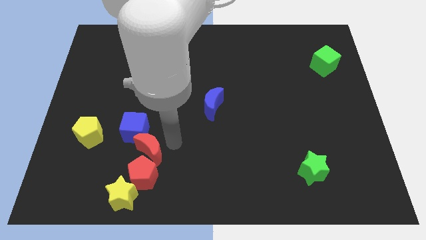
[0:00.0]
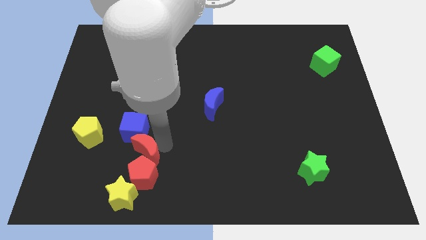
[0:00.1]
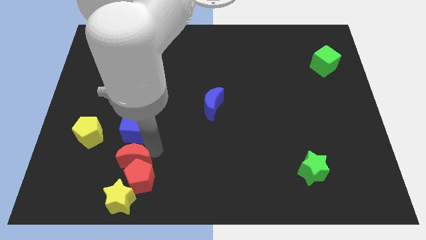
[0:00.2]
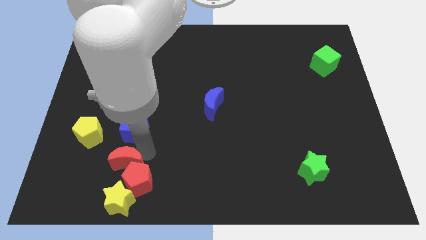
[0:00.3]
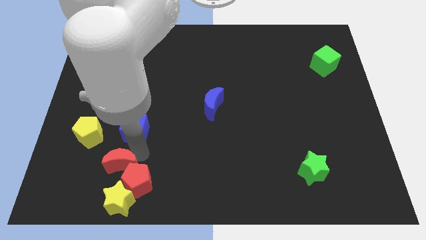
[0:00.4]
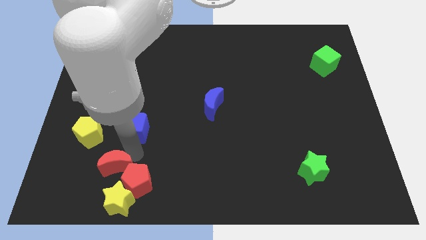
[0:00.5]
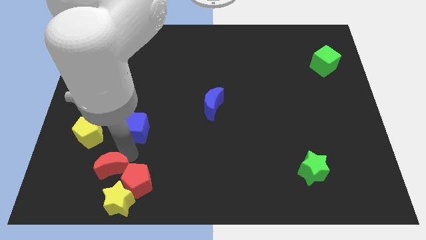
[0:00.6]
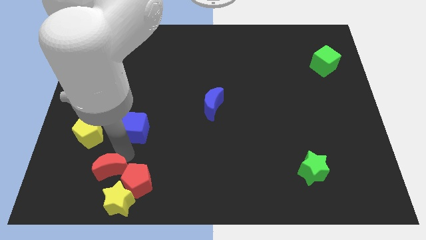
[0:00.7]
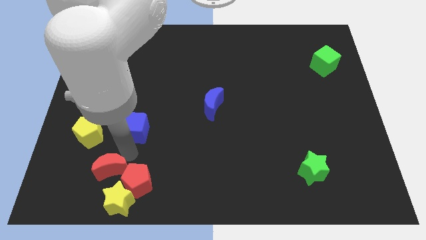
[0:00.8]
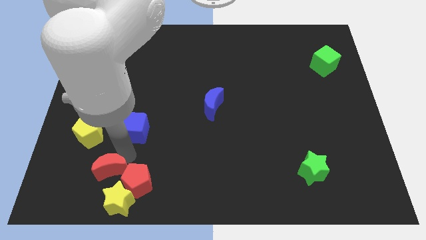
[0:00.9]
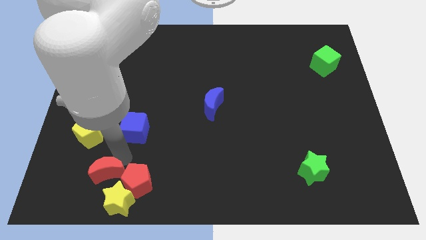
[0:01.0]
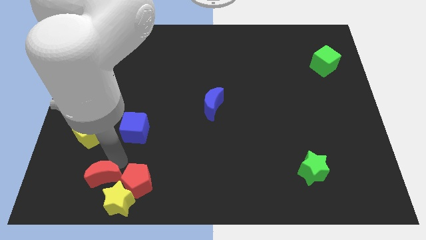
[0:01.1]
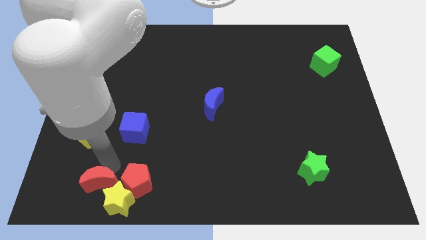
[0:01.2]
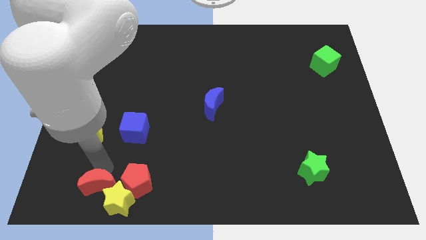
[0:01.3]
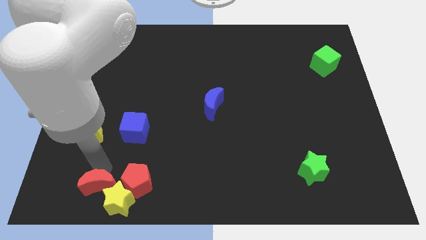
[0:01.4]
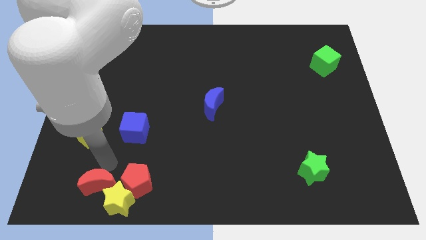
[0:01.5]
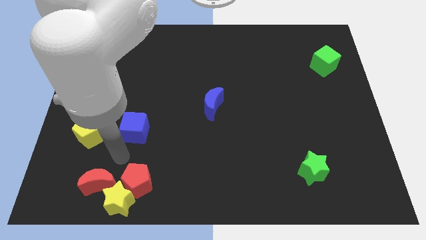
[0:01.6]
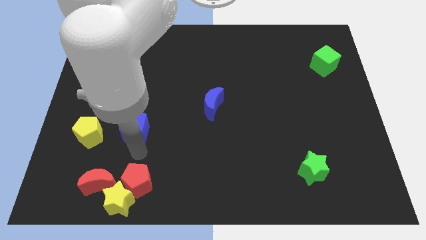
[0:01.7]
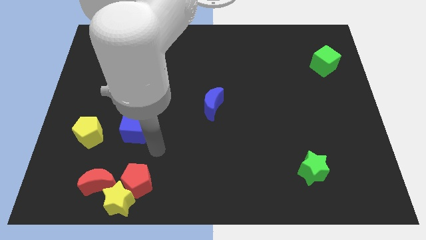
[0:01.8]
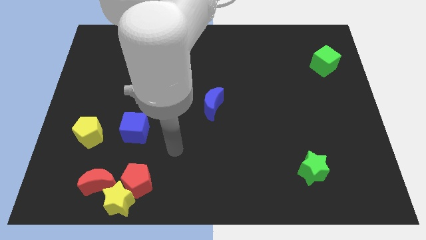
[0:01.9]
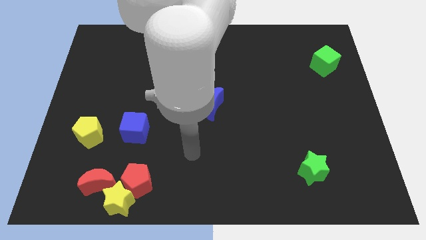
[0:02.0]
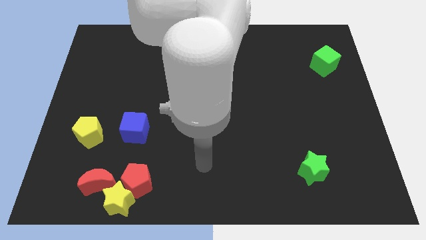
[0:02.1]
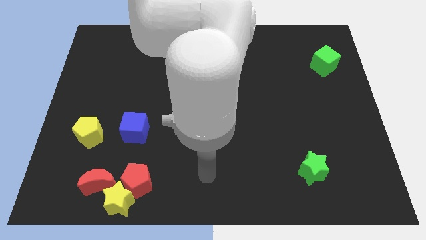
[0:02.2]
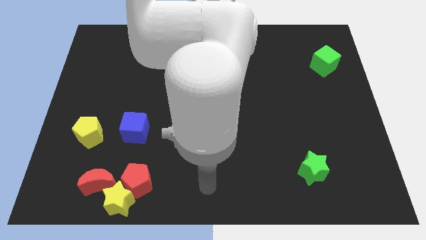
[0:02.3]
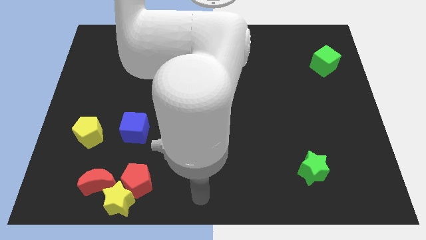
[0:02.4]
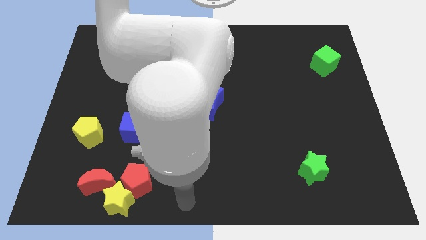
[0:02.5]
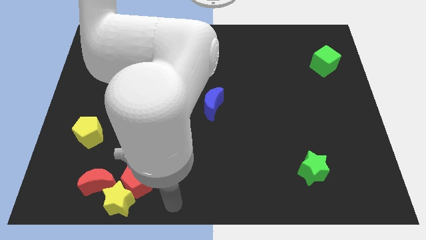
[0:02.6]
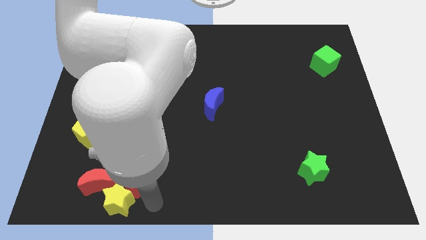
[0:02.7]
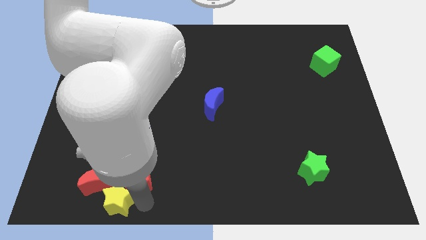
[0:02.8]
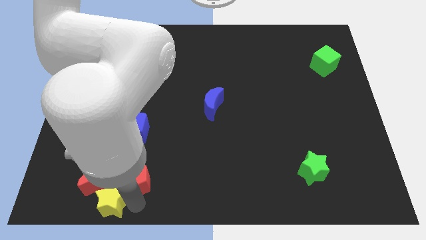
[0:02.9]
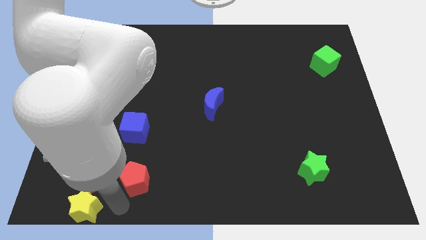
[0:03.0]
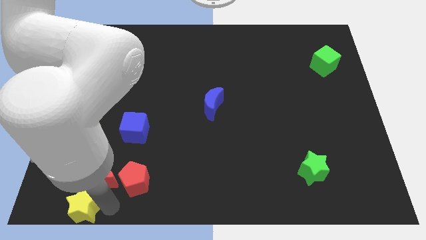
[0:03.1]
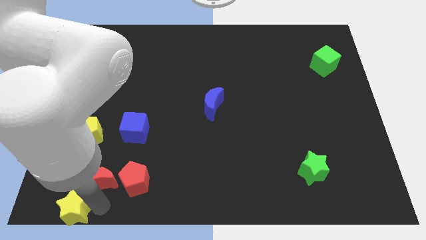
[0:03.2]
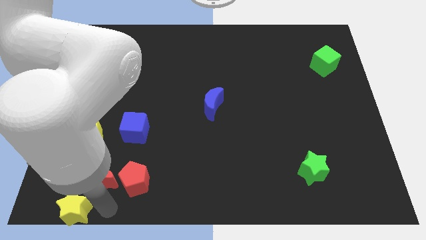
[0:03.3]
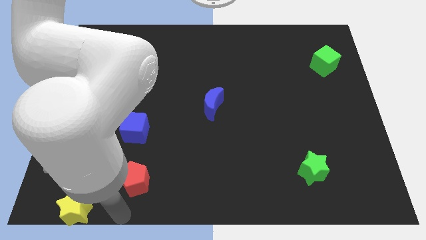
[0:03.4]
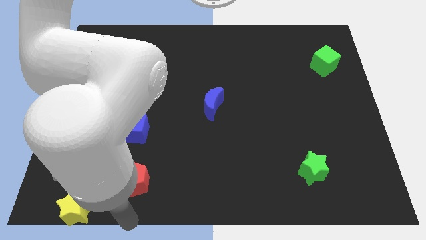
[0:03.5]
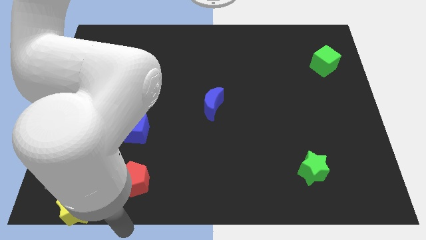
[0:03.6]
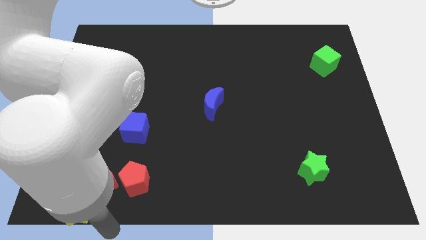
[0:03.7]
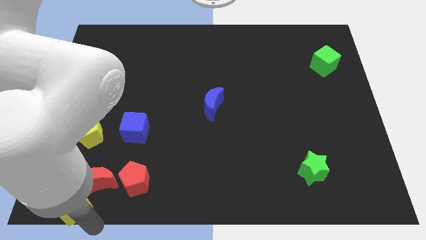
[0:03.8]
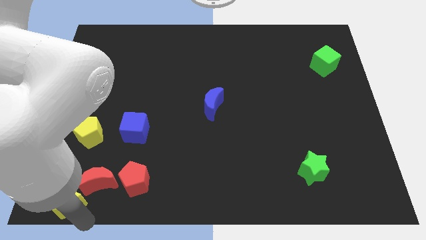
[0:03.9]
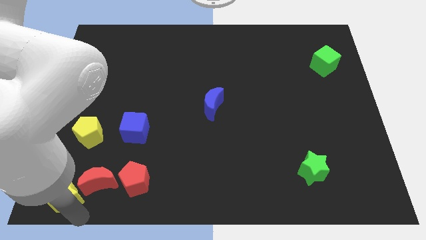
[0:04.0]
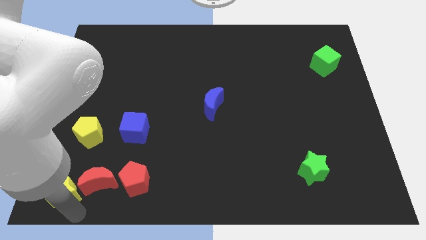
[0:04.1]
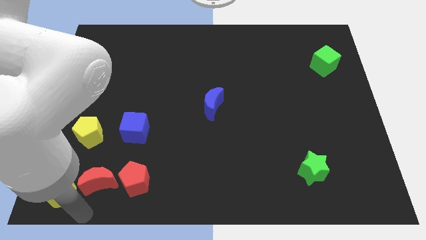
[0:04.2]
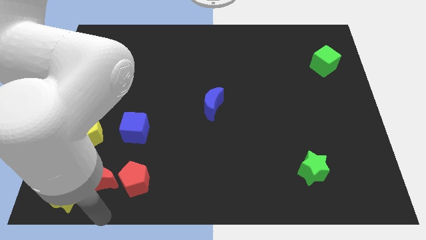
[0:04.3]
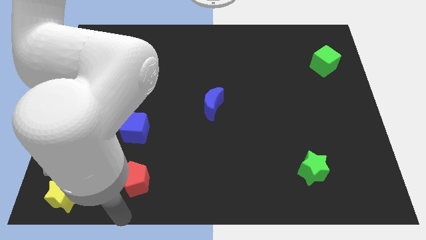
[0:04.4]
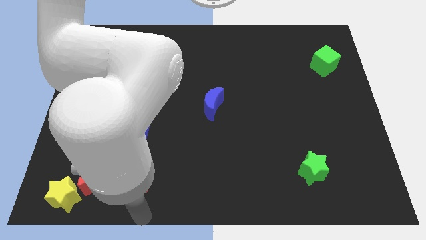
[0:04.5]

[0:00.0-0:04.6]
move yellow star to the bottom left

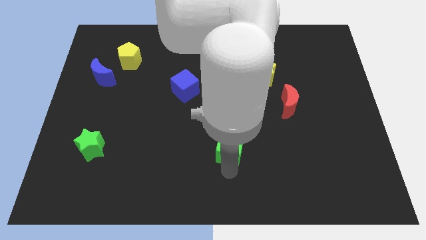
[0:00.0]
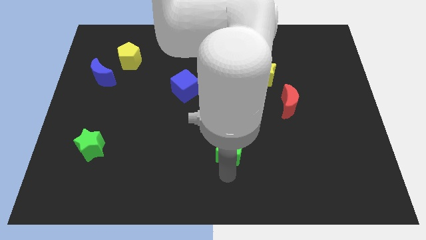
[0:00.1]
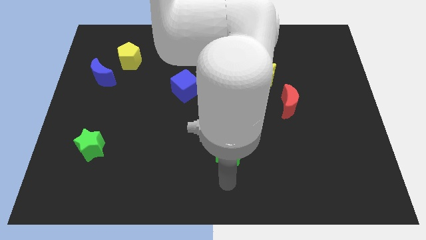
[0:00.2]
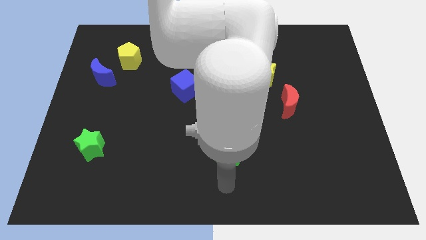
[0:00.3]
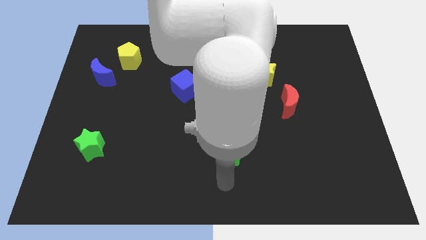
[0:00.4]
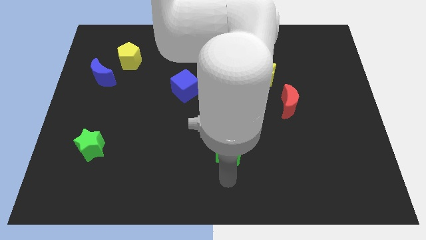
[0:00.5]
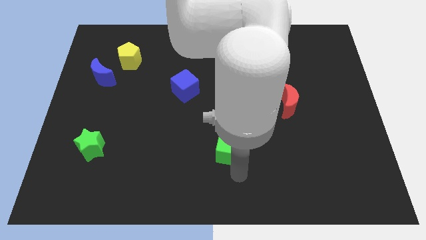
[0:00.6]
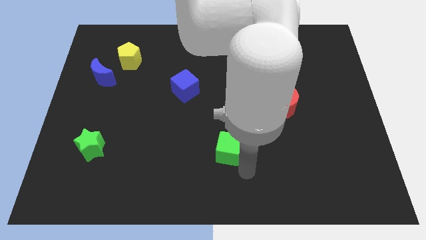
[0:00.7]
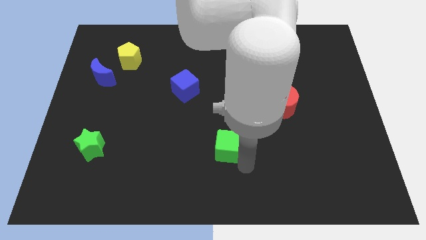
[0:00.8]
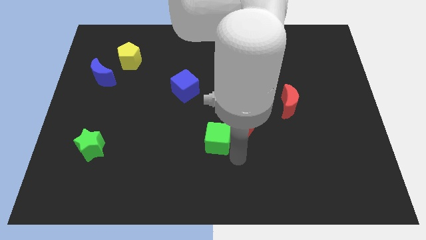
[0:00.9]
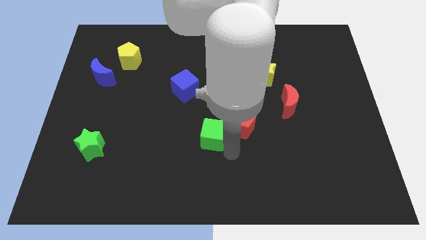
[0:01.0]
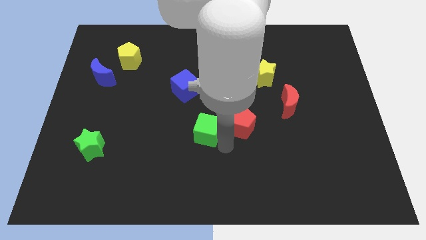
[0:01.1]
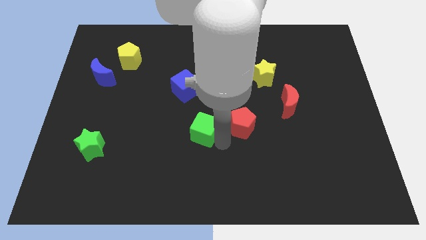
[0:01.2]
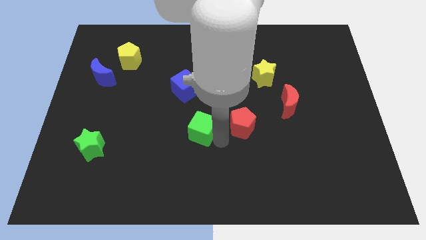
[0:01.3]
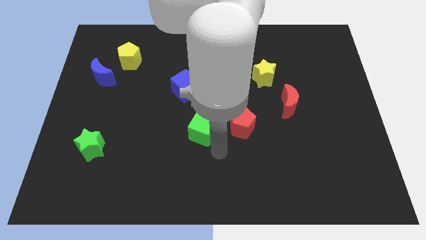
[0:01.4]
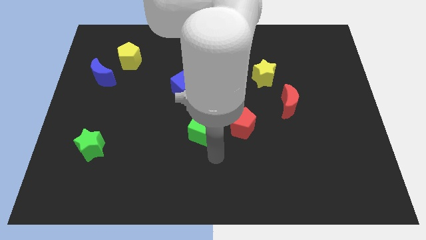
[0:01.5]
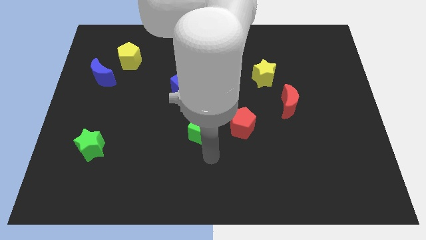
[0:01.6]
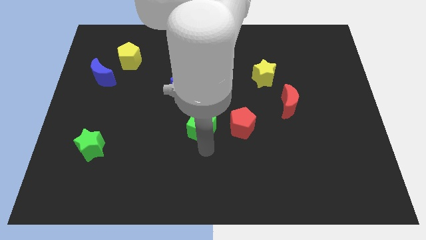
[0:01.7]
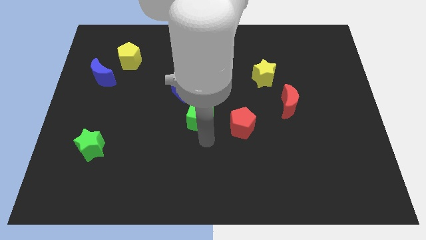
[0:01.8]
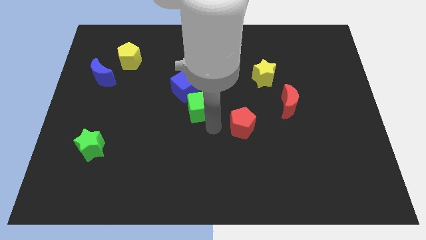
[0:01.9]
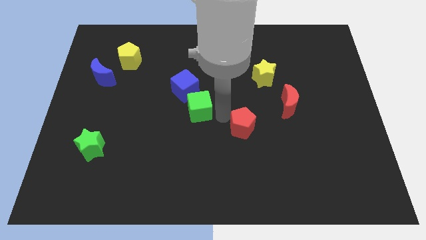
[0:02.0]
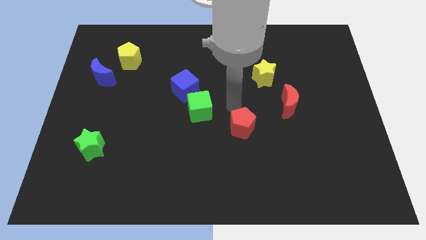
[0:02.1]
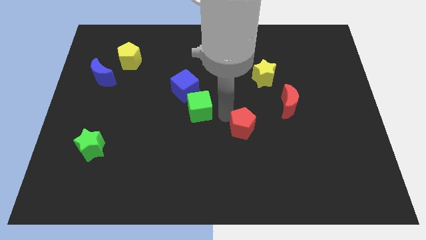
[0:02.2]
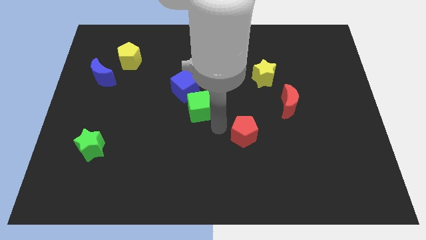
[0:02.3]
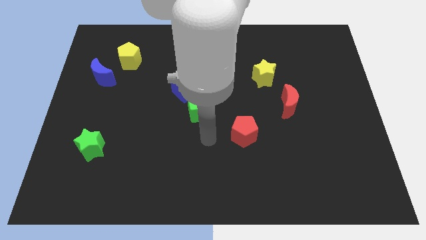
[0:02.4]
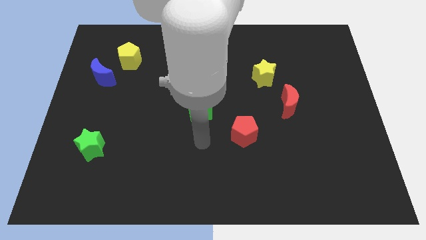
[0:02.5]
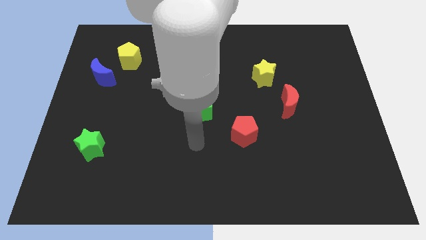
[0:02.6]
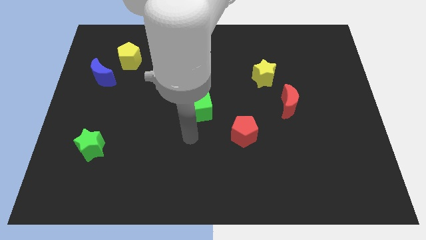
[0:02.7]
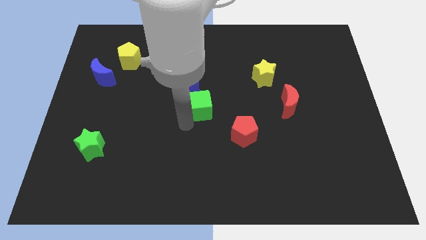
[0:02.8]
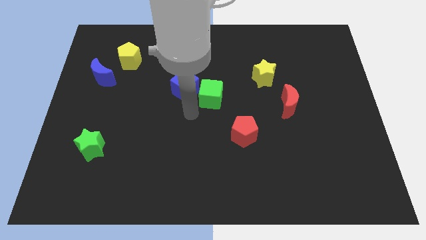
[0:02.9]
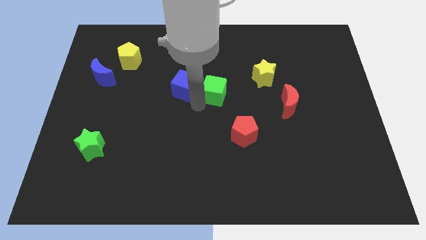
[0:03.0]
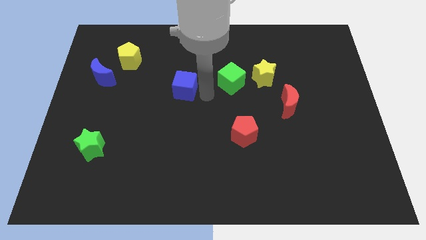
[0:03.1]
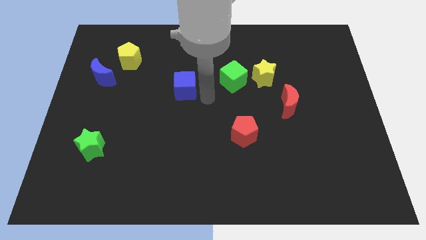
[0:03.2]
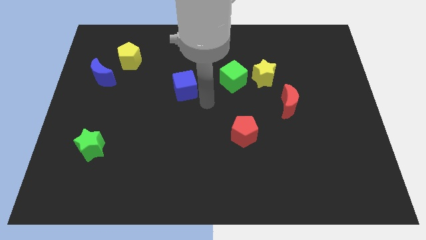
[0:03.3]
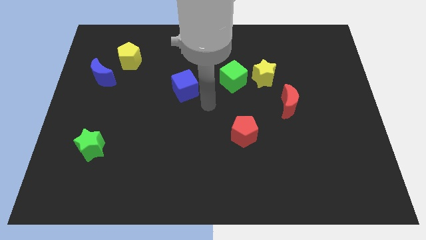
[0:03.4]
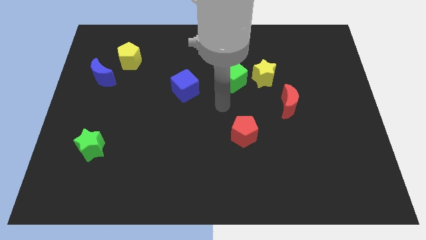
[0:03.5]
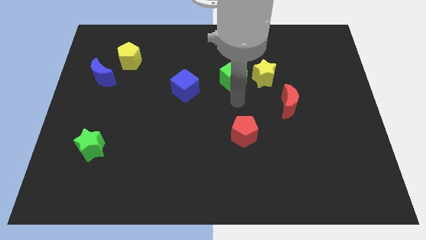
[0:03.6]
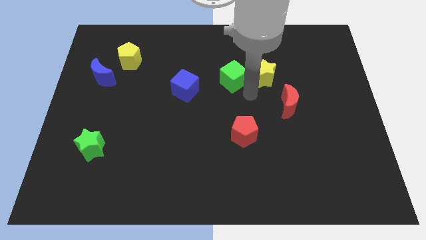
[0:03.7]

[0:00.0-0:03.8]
place the green cube in between the yellow star and blue cube

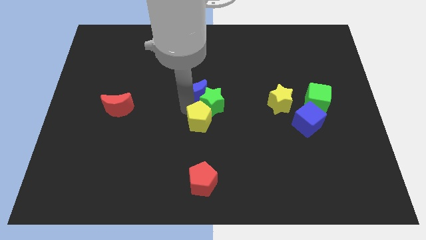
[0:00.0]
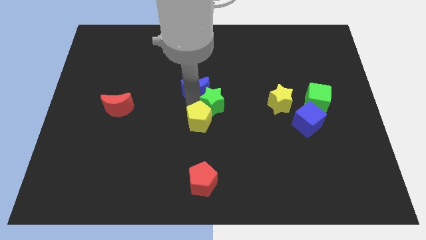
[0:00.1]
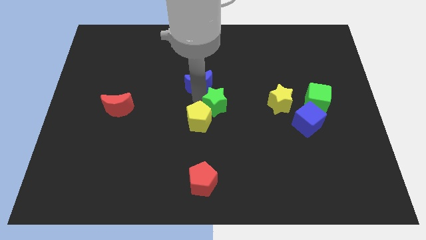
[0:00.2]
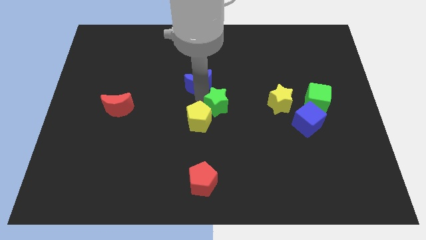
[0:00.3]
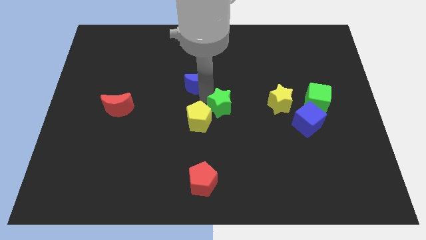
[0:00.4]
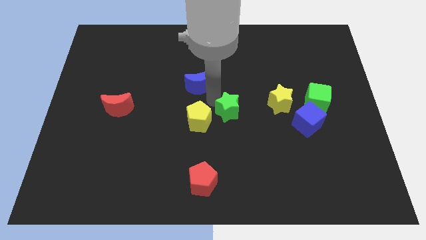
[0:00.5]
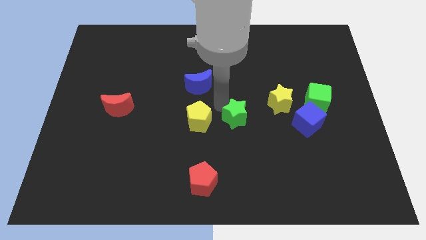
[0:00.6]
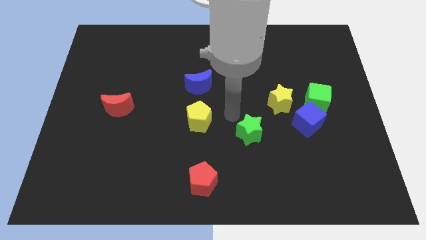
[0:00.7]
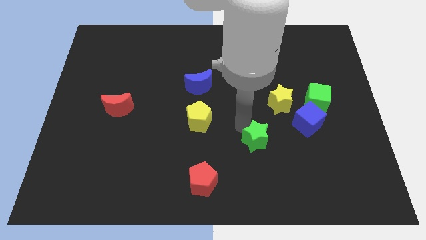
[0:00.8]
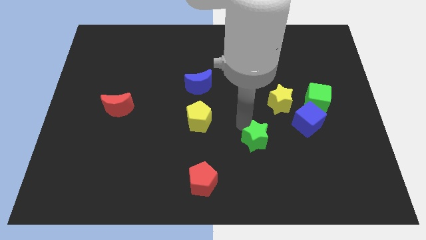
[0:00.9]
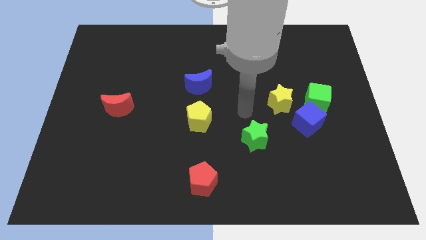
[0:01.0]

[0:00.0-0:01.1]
separate the green star and the blue crescent
